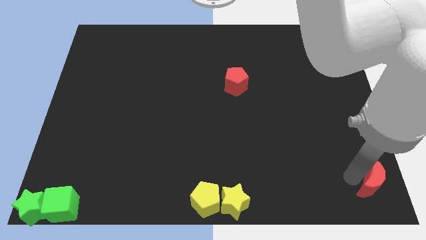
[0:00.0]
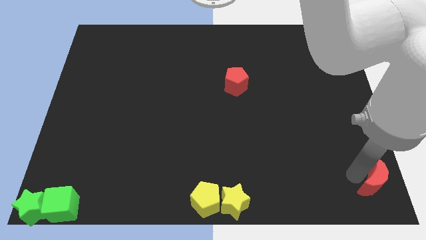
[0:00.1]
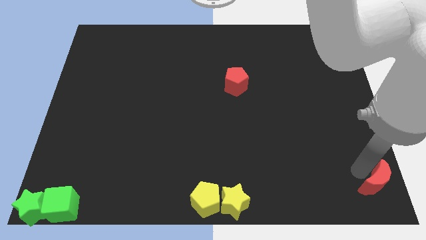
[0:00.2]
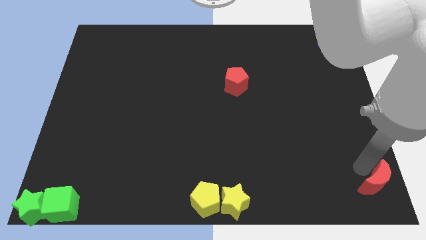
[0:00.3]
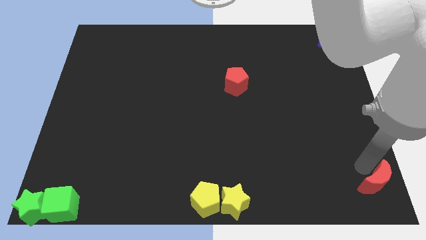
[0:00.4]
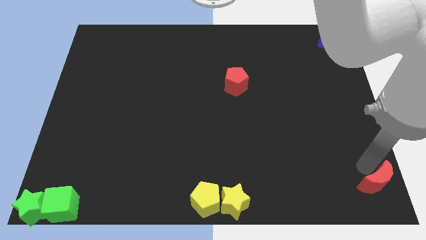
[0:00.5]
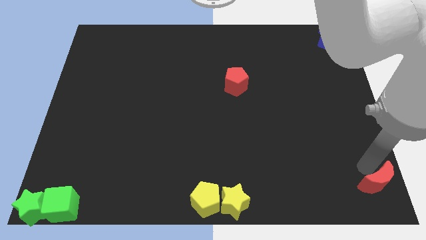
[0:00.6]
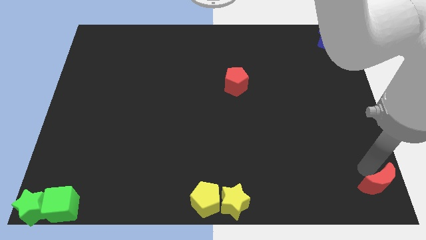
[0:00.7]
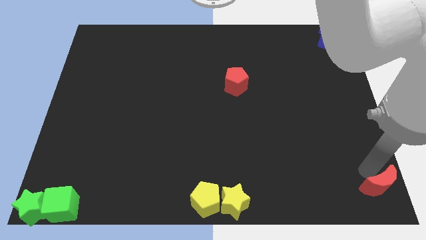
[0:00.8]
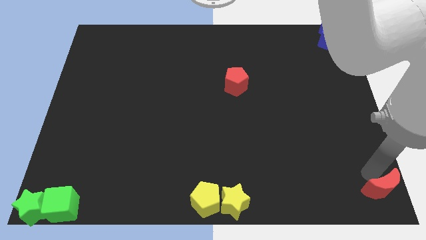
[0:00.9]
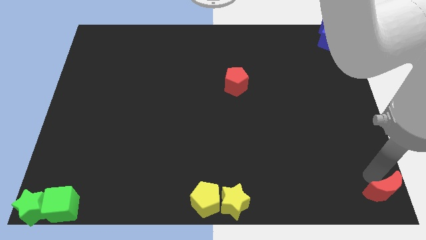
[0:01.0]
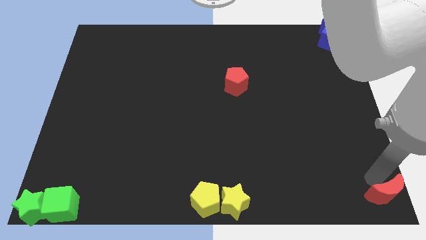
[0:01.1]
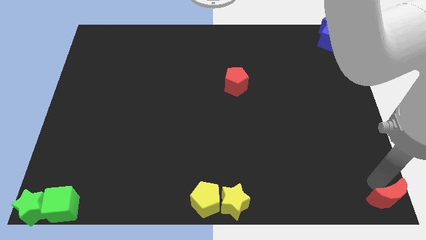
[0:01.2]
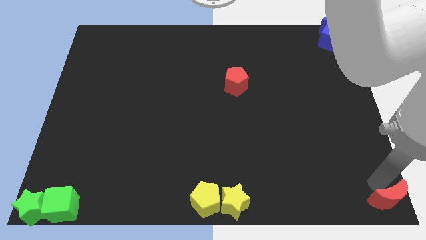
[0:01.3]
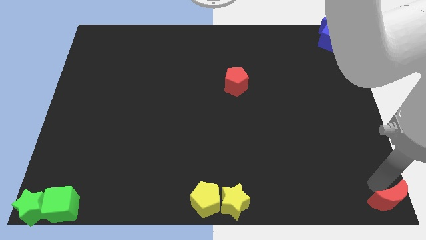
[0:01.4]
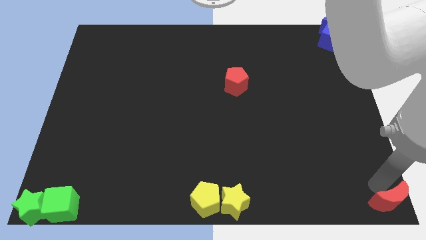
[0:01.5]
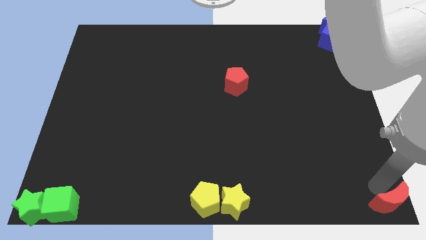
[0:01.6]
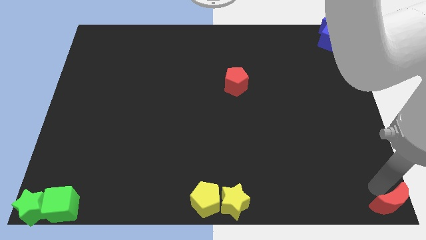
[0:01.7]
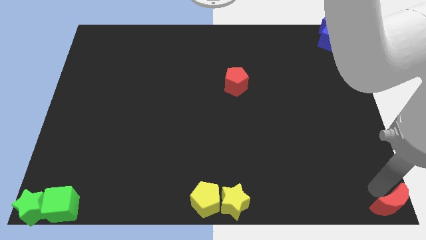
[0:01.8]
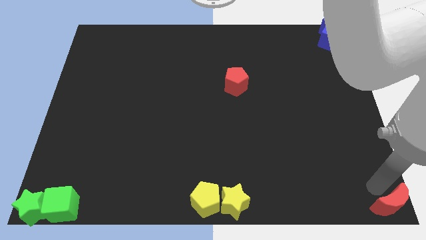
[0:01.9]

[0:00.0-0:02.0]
move the red crescent to the bottom right of the board

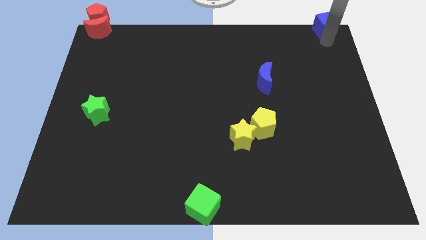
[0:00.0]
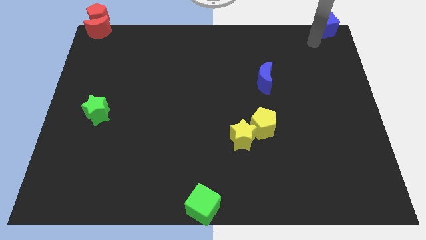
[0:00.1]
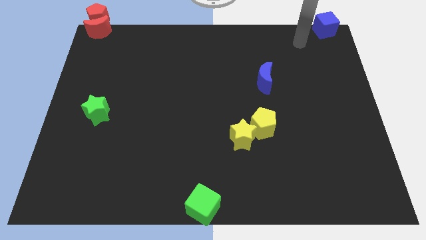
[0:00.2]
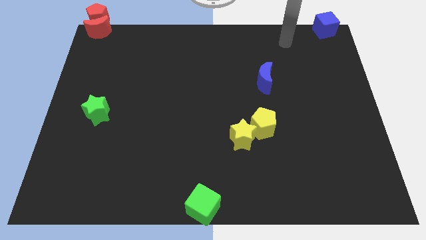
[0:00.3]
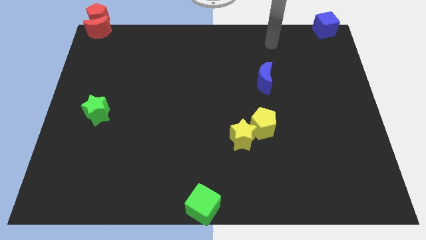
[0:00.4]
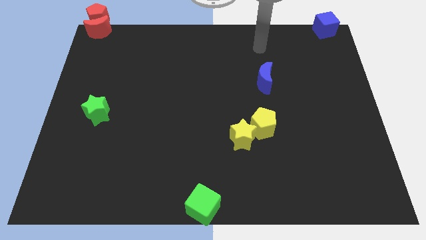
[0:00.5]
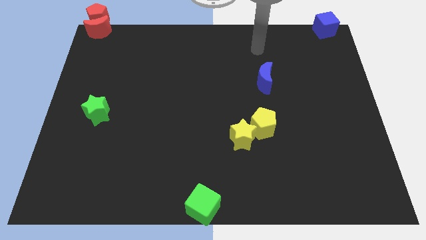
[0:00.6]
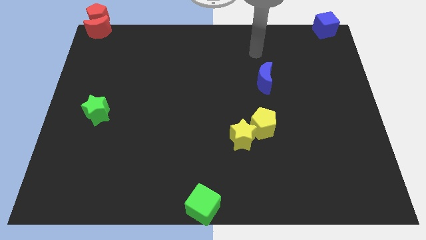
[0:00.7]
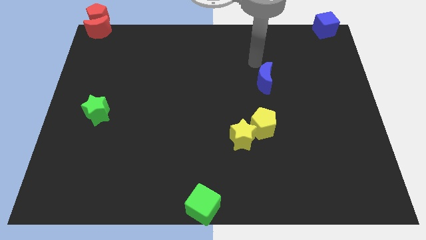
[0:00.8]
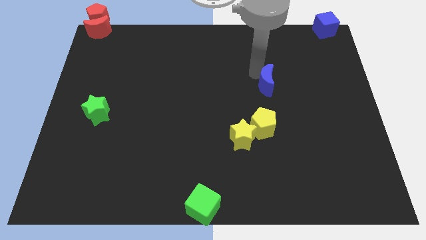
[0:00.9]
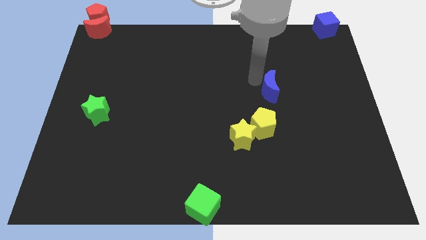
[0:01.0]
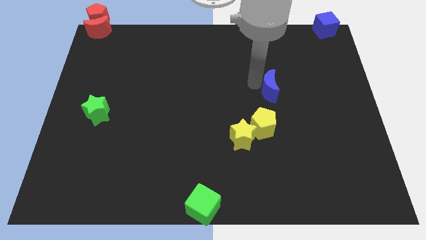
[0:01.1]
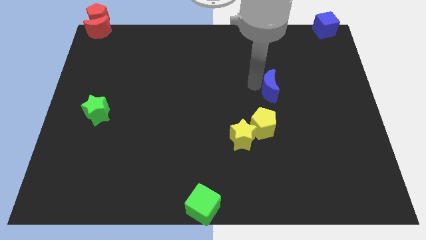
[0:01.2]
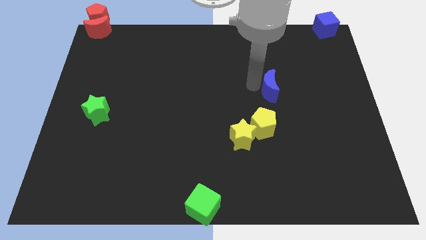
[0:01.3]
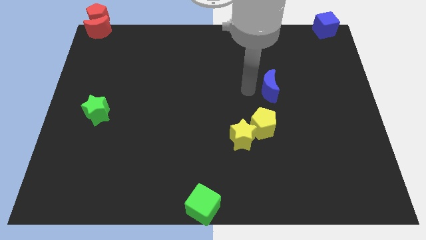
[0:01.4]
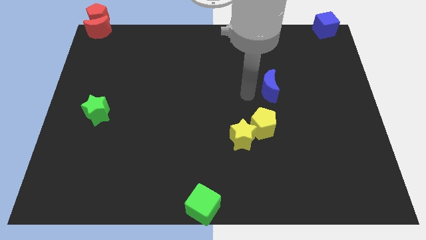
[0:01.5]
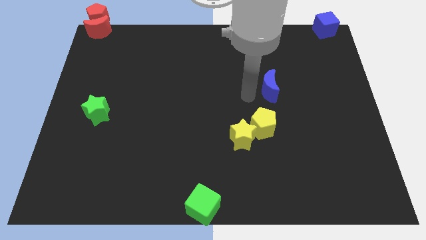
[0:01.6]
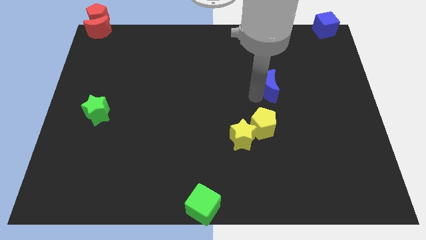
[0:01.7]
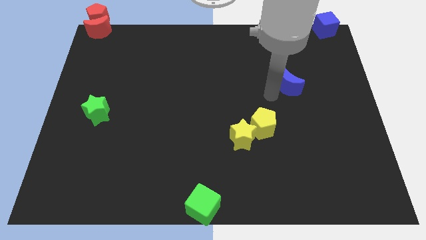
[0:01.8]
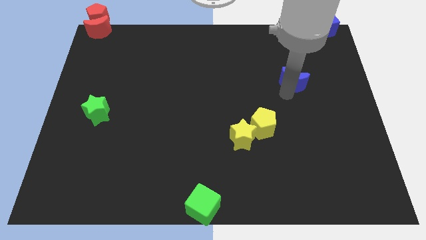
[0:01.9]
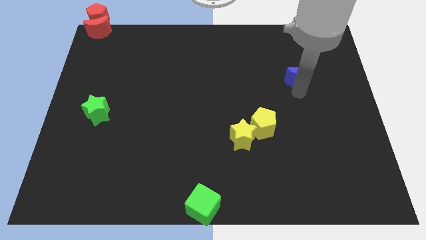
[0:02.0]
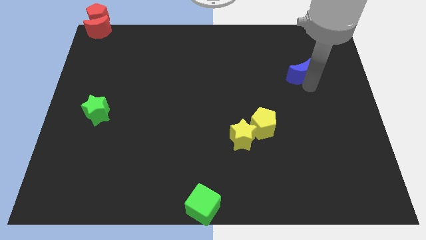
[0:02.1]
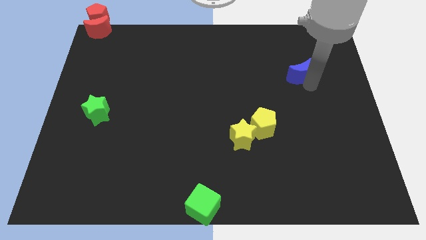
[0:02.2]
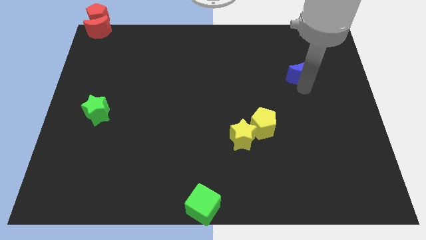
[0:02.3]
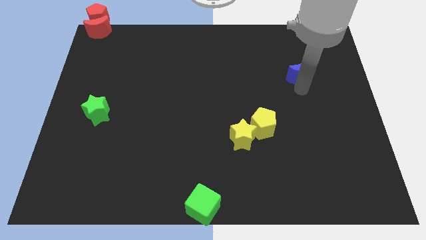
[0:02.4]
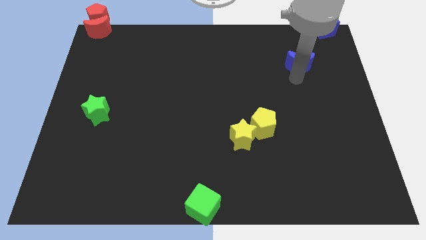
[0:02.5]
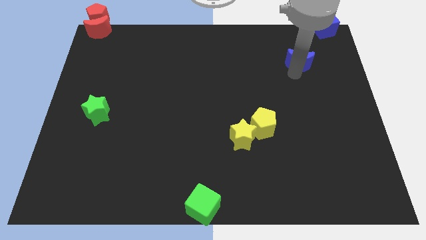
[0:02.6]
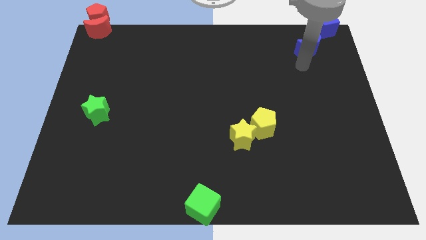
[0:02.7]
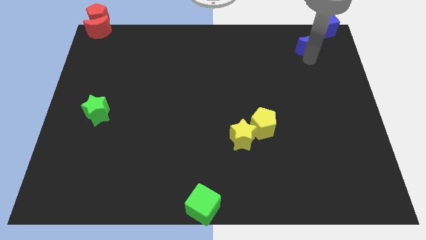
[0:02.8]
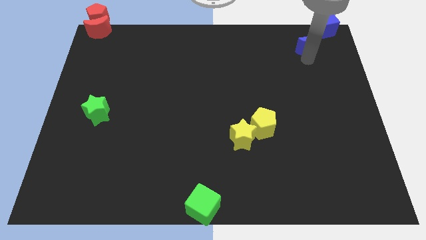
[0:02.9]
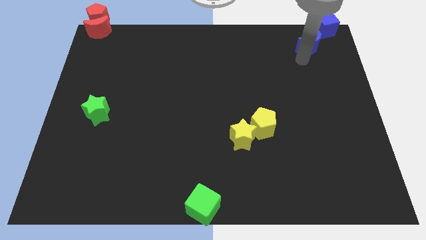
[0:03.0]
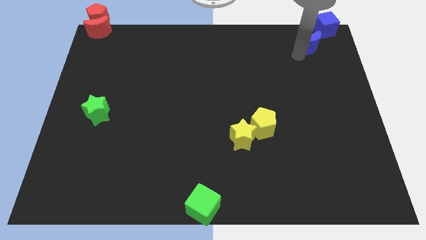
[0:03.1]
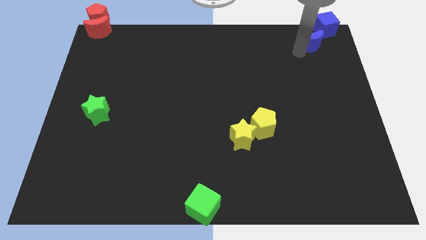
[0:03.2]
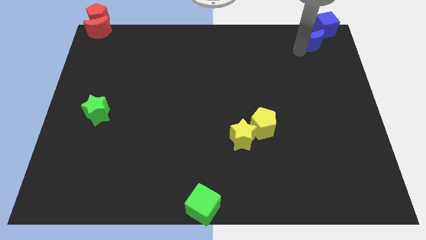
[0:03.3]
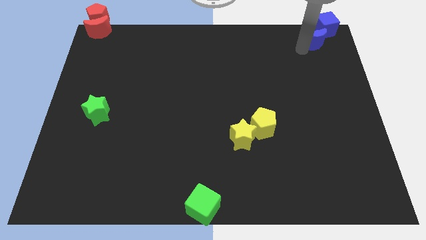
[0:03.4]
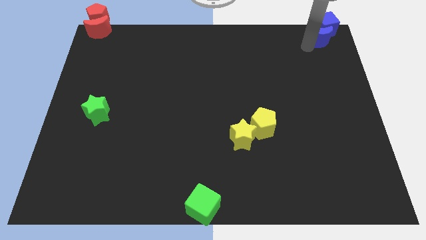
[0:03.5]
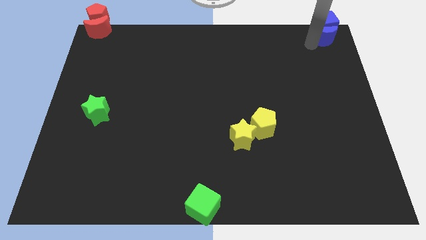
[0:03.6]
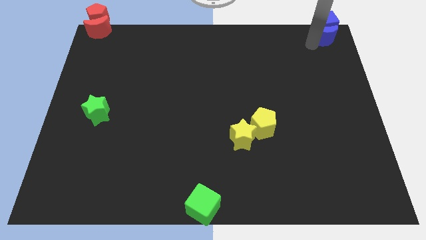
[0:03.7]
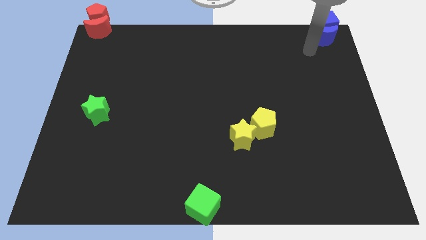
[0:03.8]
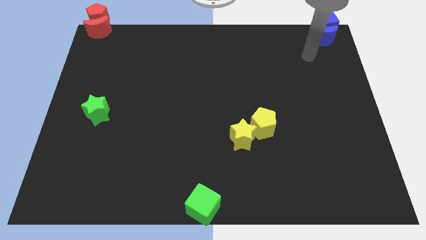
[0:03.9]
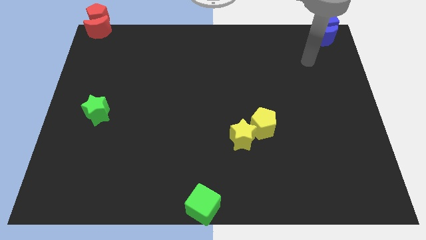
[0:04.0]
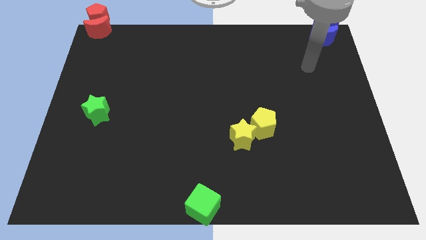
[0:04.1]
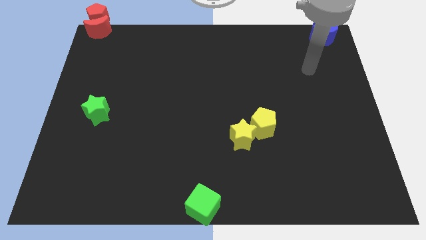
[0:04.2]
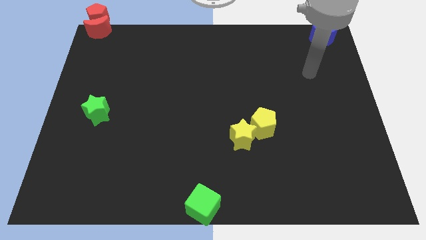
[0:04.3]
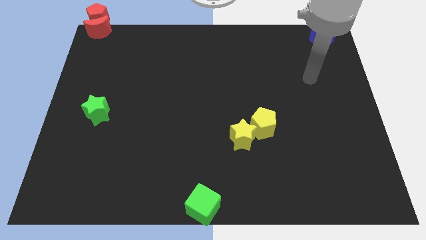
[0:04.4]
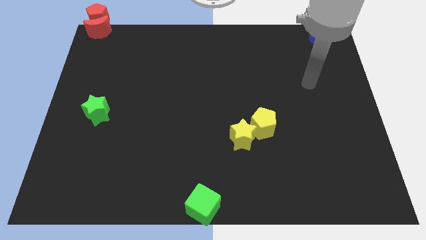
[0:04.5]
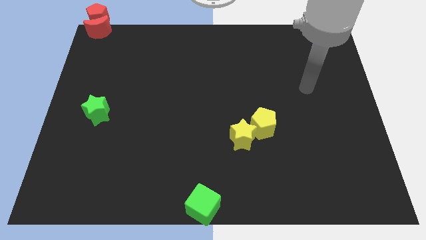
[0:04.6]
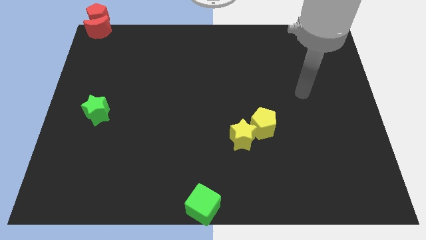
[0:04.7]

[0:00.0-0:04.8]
move the blue moon below into blue cube

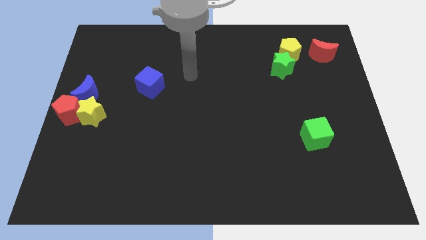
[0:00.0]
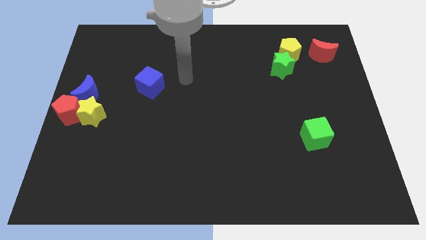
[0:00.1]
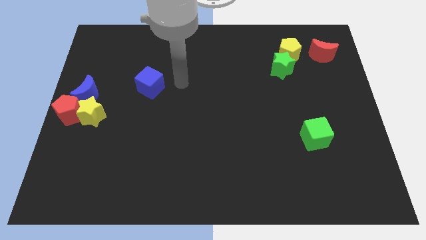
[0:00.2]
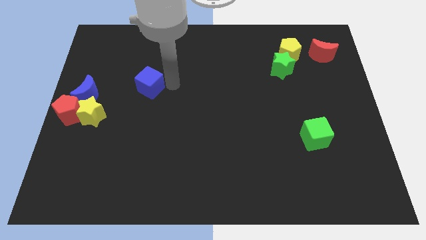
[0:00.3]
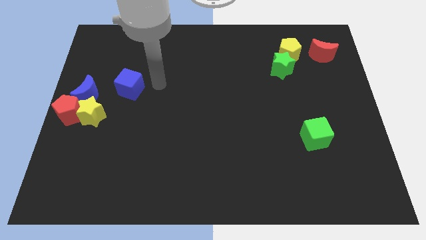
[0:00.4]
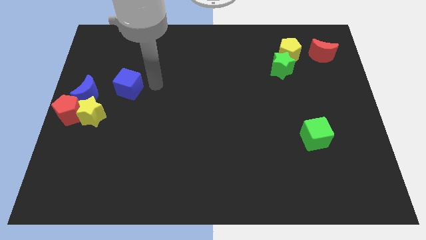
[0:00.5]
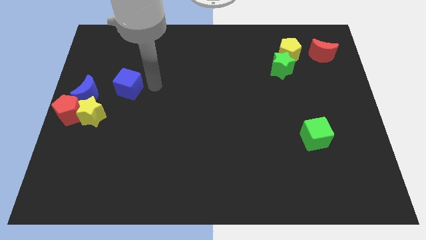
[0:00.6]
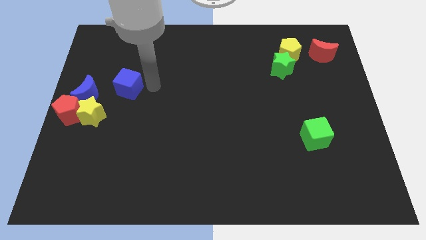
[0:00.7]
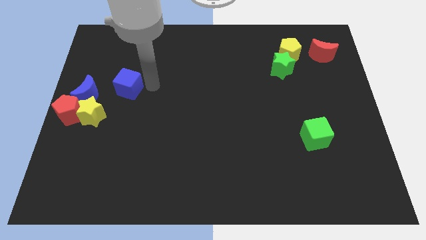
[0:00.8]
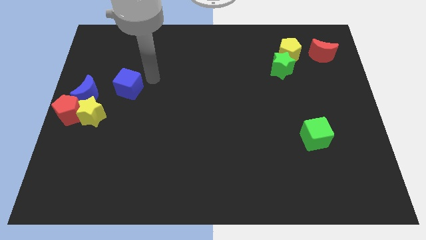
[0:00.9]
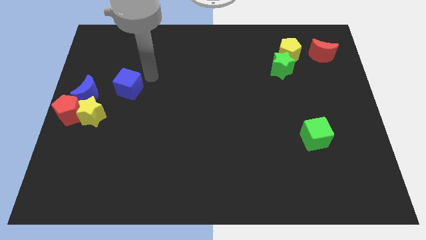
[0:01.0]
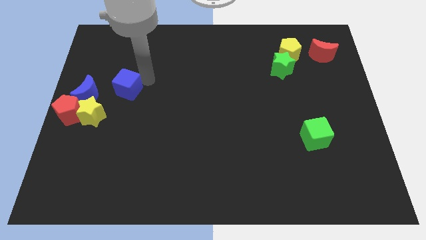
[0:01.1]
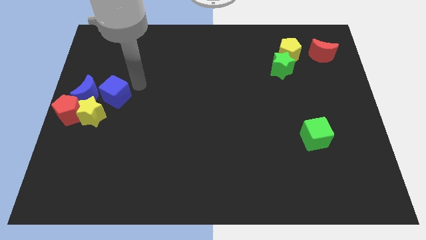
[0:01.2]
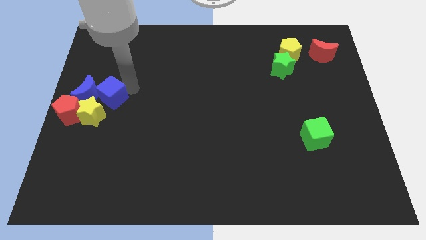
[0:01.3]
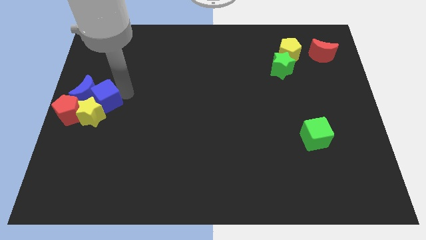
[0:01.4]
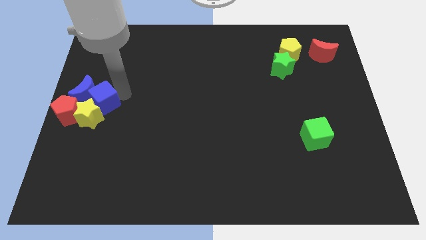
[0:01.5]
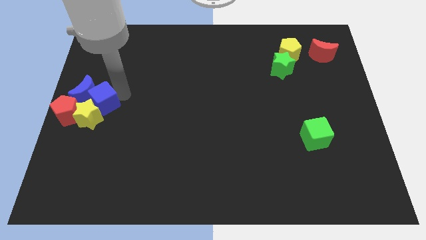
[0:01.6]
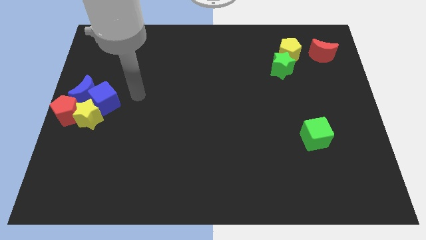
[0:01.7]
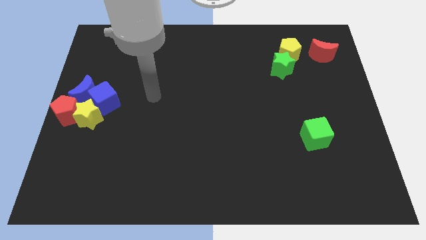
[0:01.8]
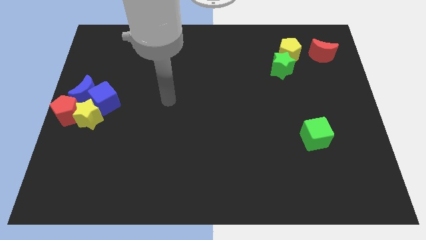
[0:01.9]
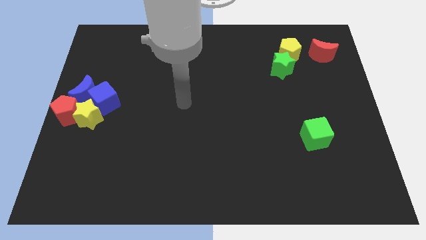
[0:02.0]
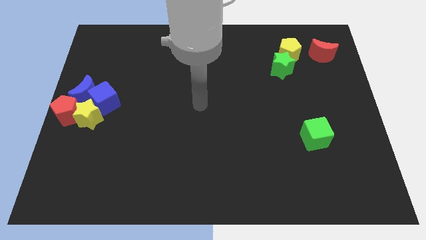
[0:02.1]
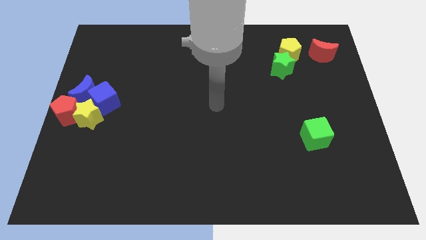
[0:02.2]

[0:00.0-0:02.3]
push blue cube into the yellow star
